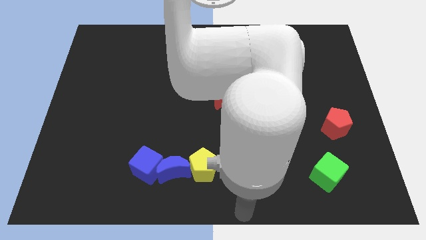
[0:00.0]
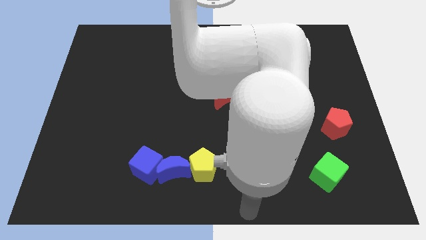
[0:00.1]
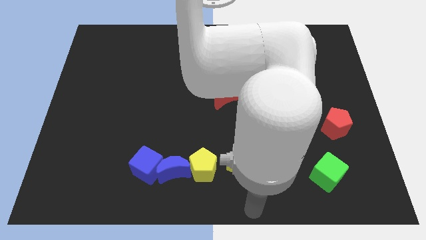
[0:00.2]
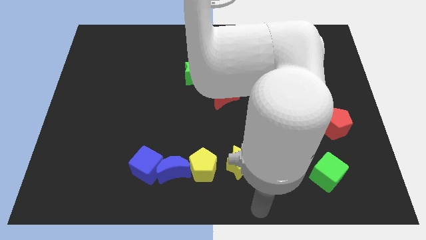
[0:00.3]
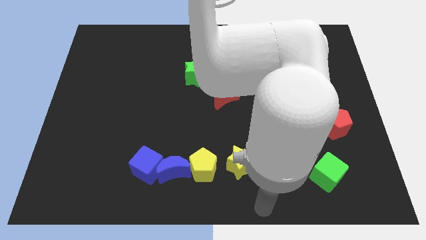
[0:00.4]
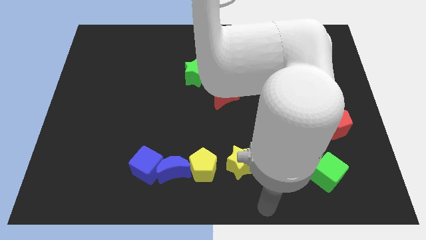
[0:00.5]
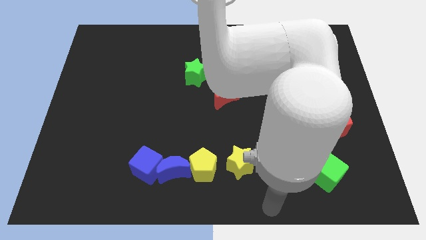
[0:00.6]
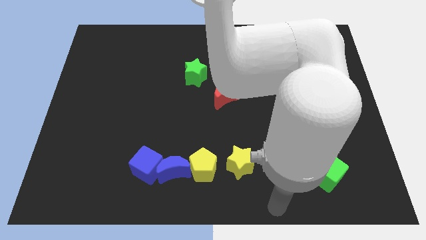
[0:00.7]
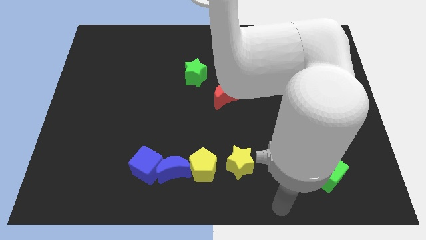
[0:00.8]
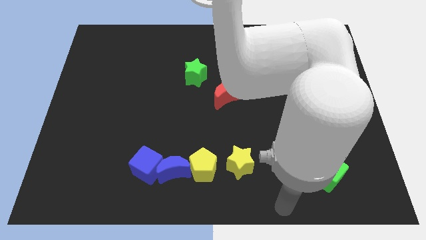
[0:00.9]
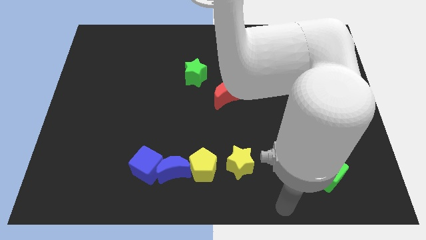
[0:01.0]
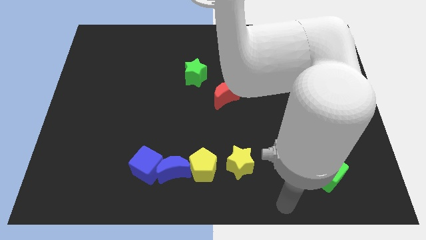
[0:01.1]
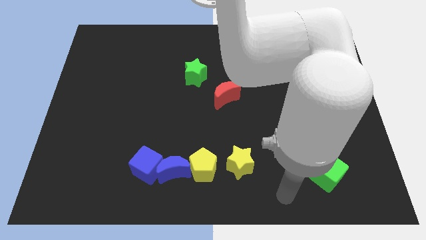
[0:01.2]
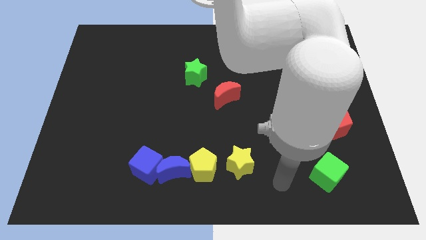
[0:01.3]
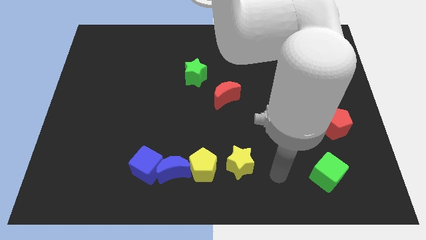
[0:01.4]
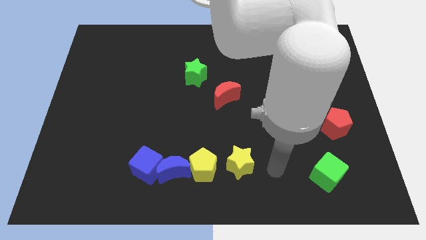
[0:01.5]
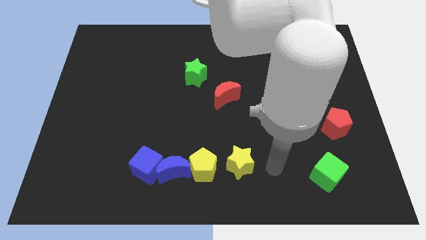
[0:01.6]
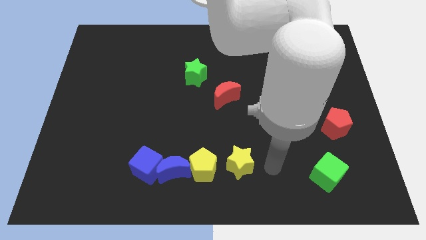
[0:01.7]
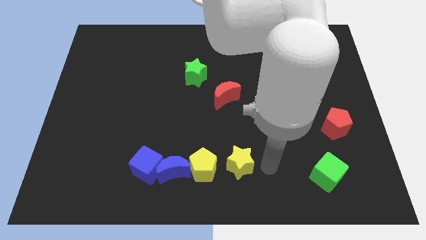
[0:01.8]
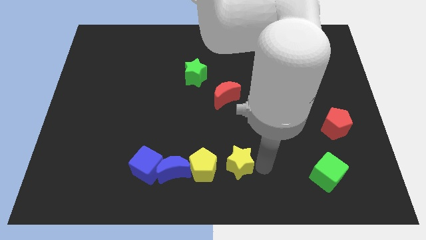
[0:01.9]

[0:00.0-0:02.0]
move your arm near to the yellow star

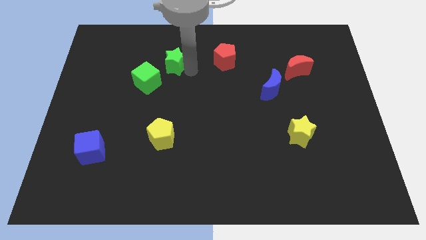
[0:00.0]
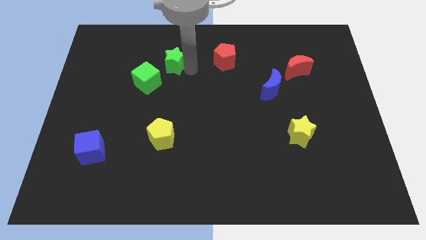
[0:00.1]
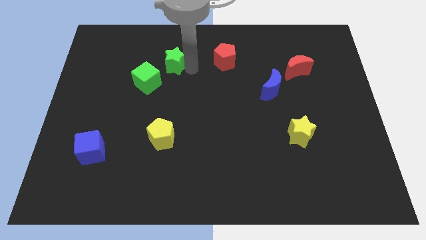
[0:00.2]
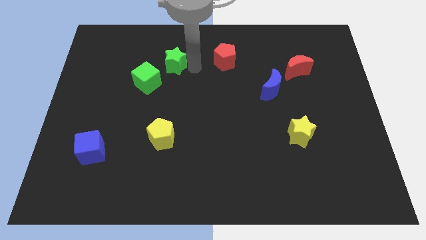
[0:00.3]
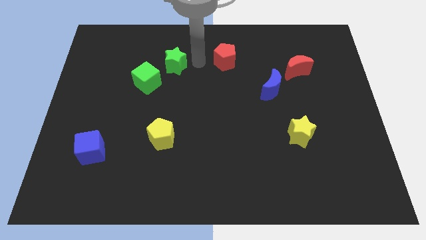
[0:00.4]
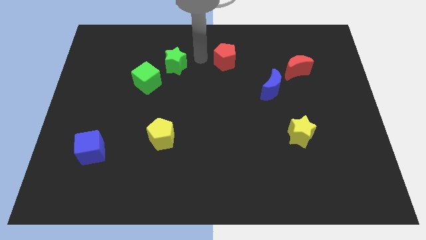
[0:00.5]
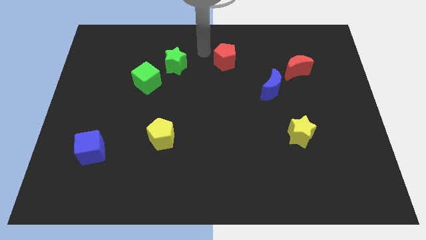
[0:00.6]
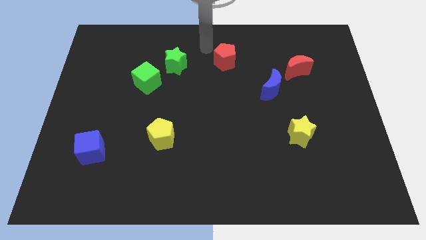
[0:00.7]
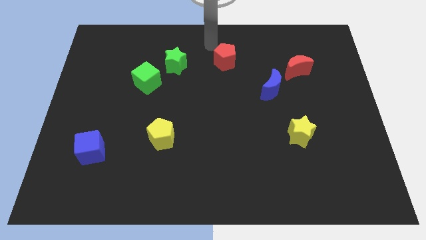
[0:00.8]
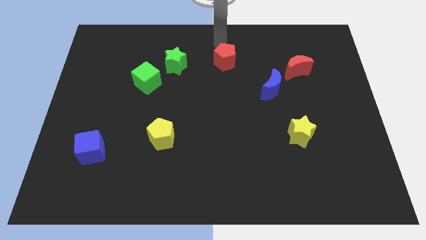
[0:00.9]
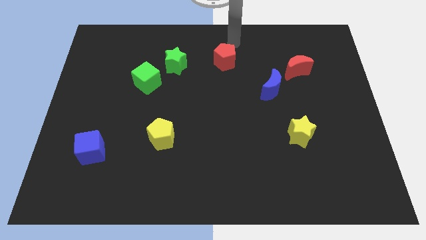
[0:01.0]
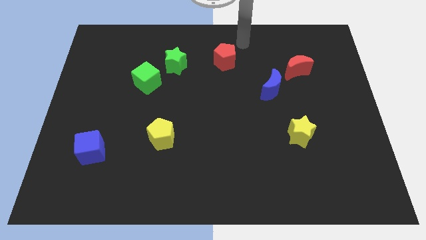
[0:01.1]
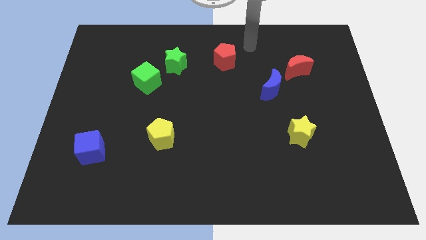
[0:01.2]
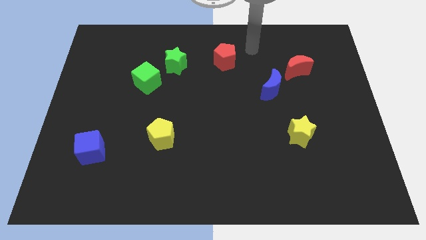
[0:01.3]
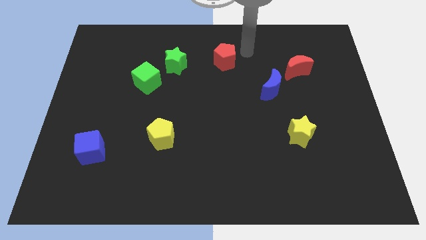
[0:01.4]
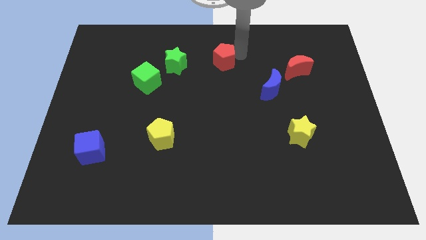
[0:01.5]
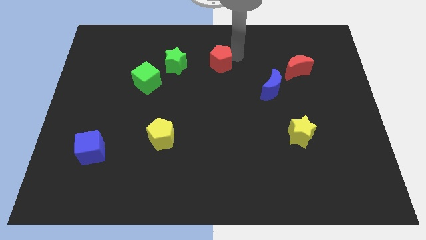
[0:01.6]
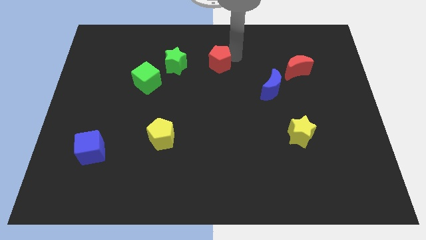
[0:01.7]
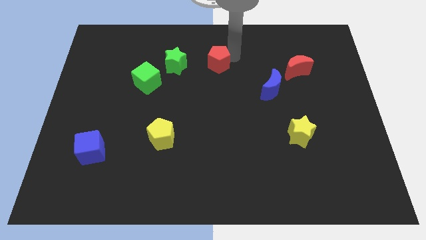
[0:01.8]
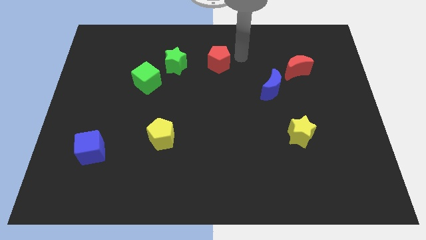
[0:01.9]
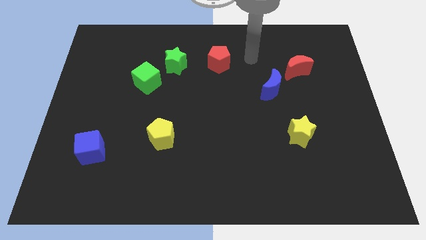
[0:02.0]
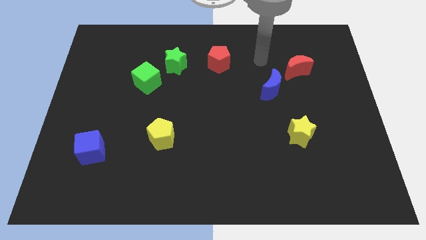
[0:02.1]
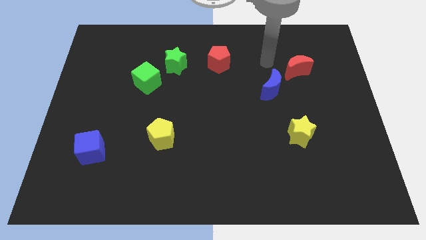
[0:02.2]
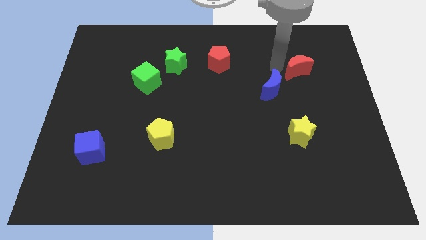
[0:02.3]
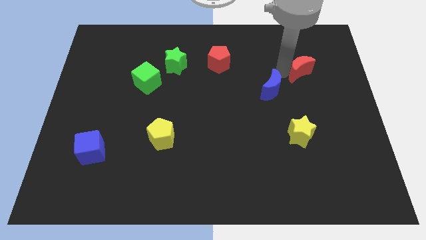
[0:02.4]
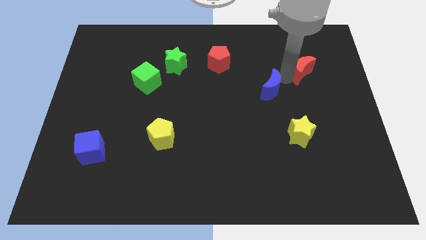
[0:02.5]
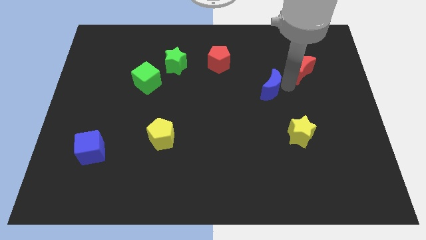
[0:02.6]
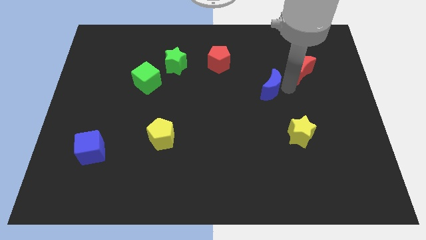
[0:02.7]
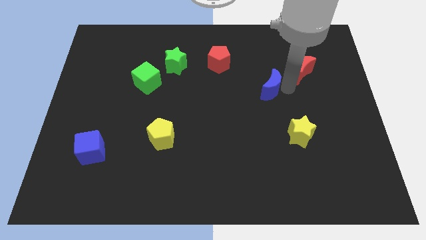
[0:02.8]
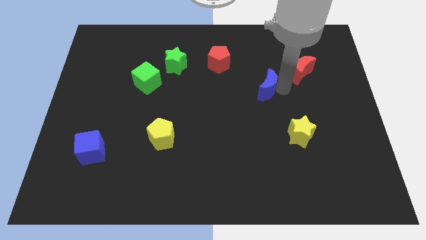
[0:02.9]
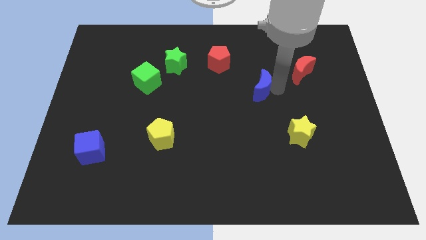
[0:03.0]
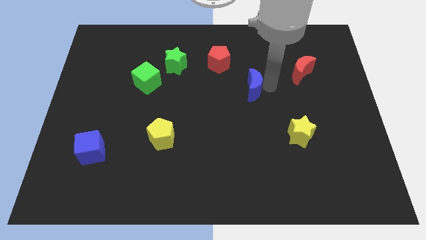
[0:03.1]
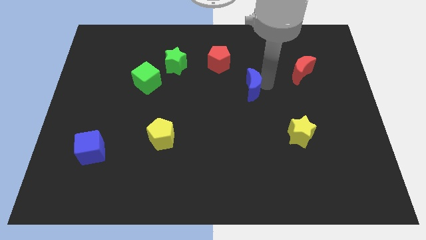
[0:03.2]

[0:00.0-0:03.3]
put blue crescent and red pentagon in a diagonal line

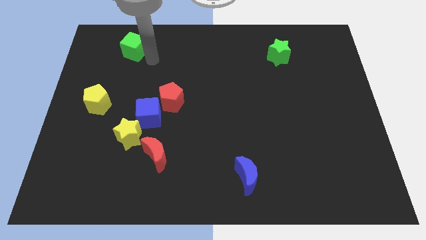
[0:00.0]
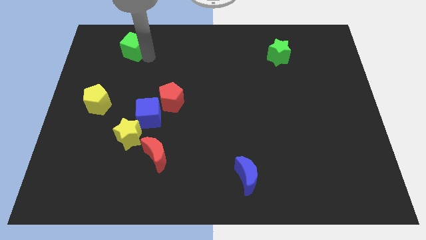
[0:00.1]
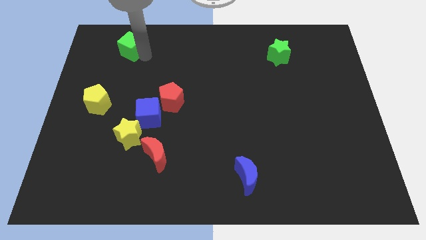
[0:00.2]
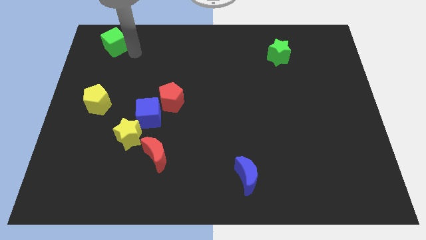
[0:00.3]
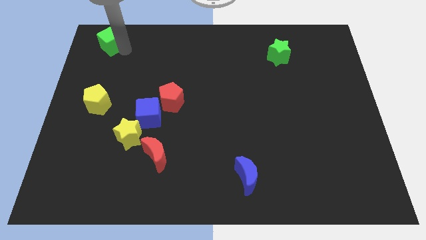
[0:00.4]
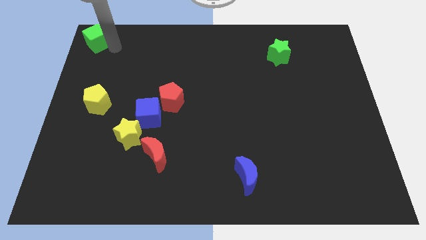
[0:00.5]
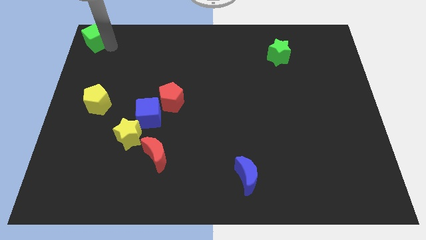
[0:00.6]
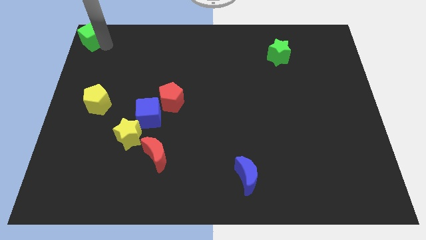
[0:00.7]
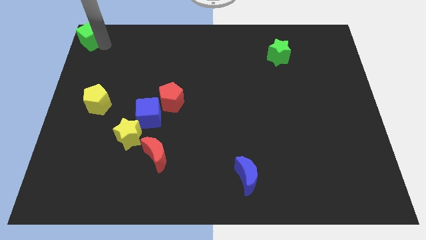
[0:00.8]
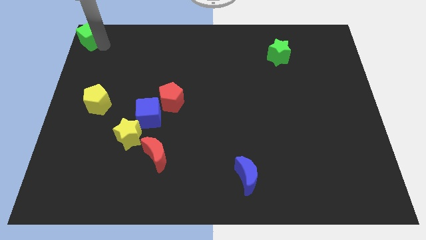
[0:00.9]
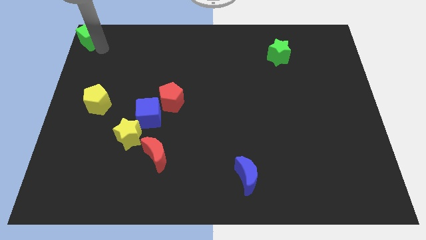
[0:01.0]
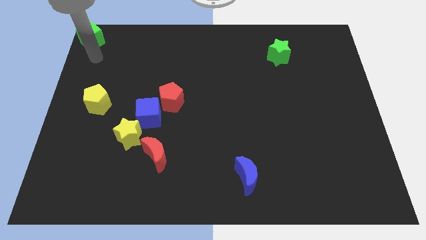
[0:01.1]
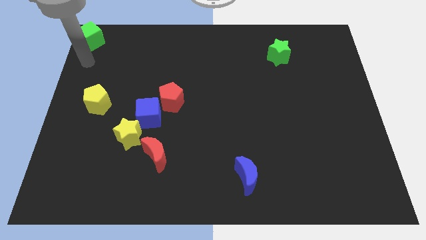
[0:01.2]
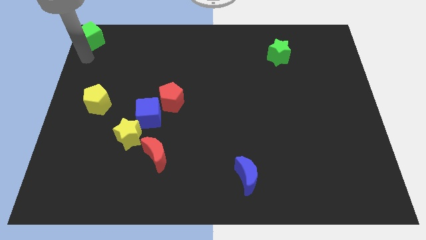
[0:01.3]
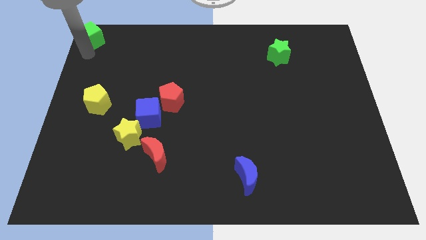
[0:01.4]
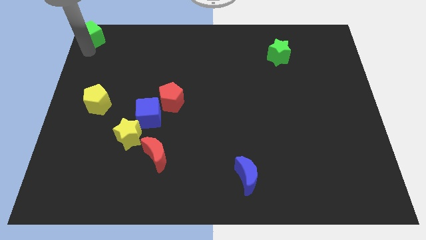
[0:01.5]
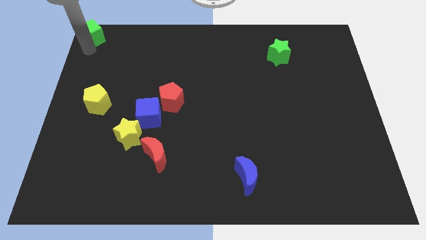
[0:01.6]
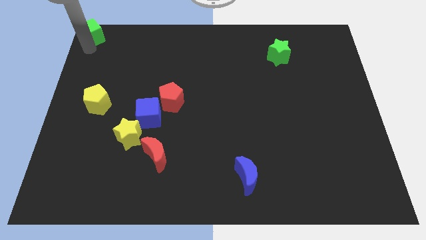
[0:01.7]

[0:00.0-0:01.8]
move the green cube to the top left

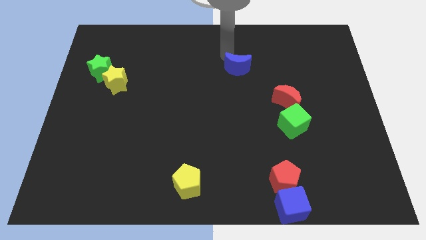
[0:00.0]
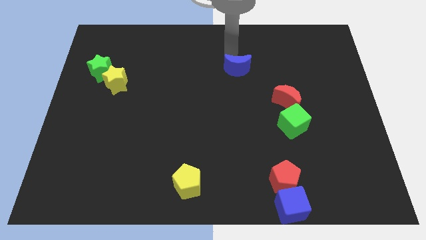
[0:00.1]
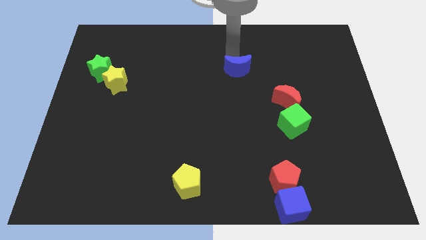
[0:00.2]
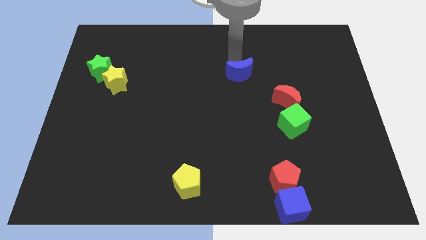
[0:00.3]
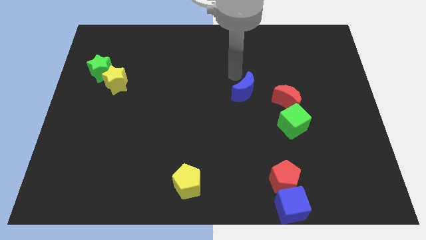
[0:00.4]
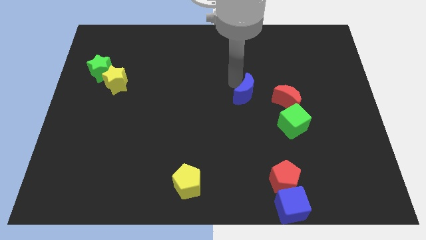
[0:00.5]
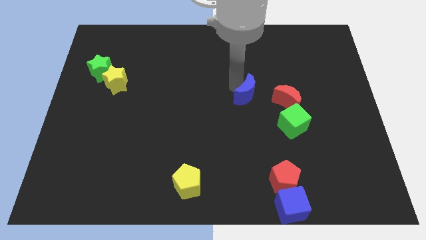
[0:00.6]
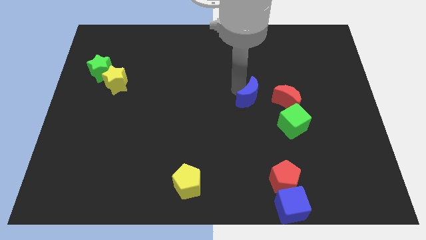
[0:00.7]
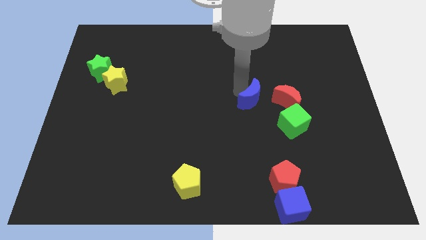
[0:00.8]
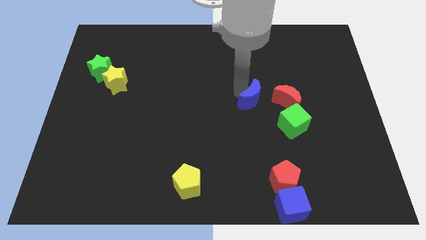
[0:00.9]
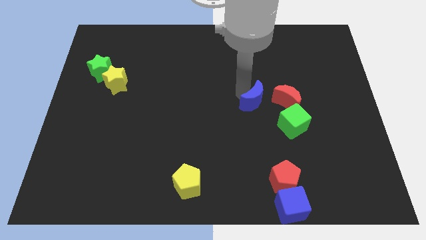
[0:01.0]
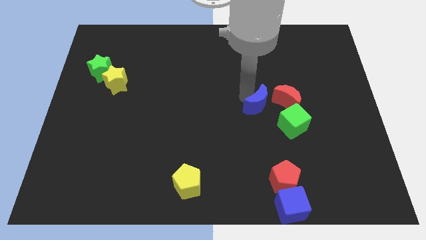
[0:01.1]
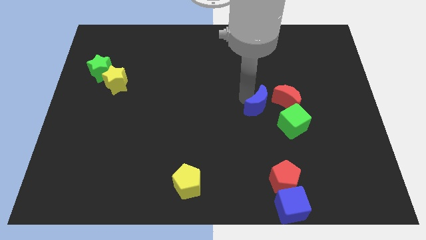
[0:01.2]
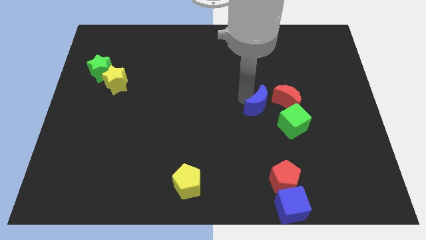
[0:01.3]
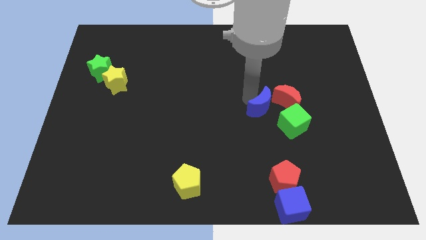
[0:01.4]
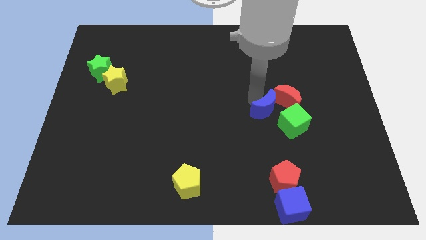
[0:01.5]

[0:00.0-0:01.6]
move blue moon towards red moon green cube

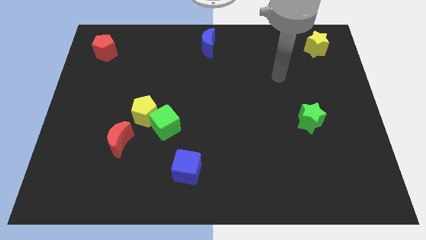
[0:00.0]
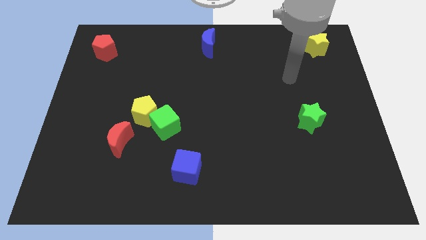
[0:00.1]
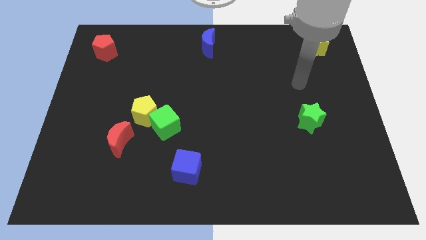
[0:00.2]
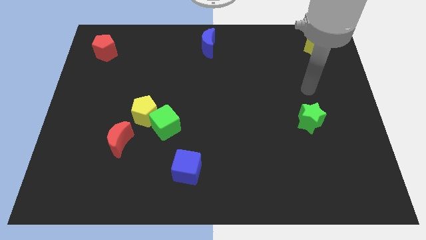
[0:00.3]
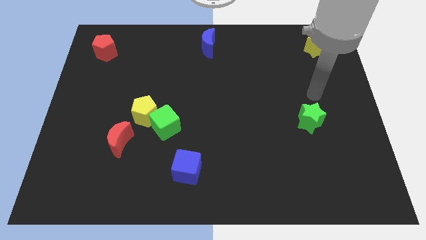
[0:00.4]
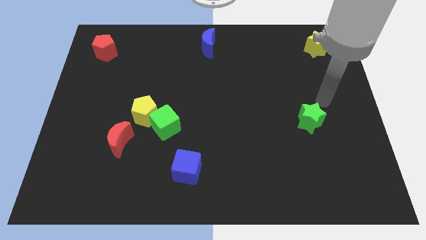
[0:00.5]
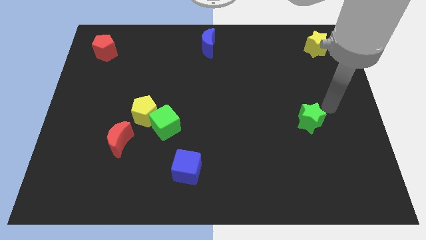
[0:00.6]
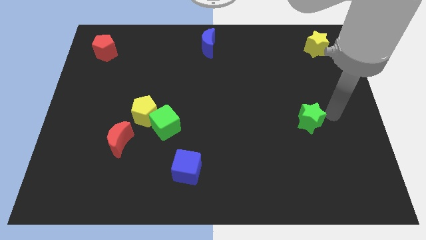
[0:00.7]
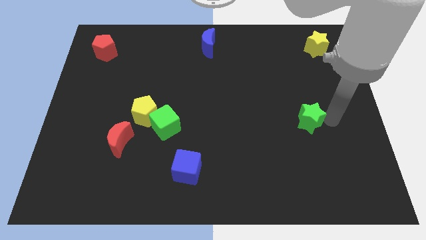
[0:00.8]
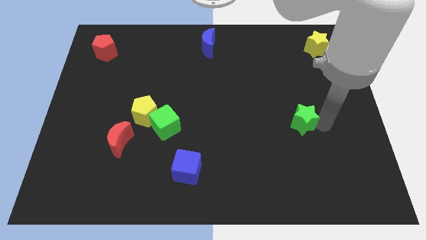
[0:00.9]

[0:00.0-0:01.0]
move your arm towards the green star
